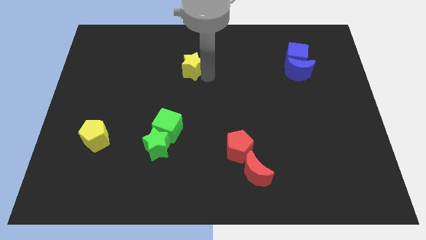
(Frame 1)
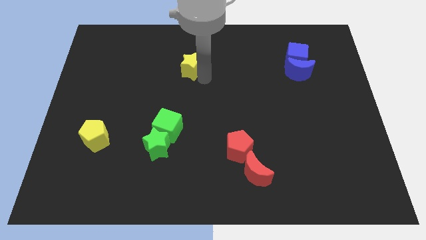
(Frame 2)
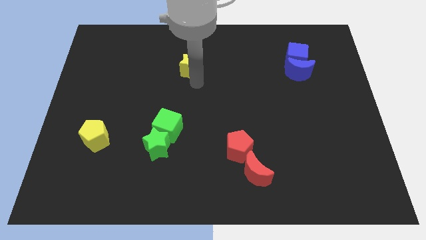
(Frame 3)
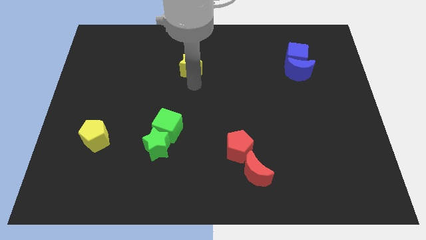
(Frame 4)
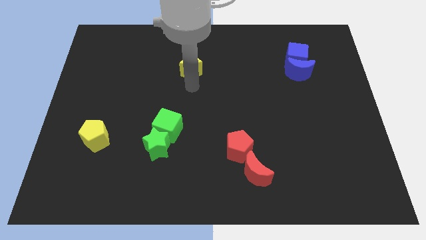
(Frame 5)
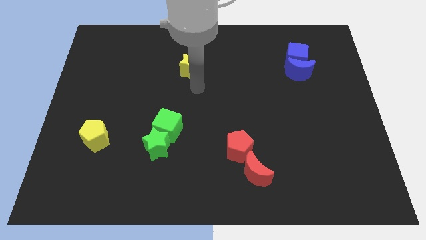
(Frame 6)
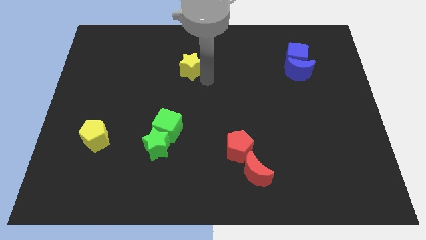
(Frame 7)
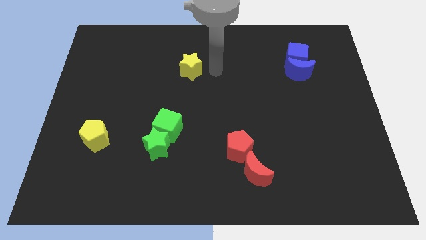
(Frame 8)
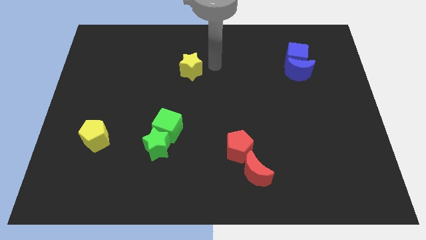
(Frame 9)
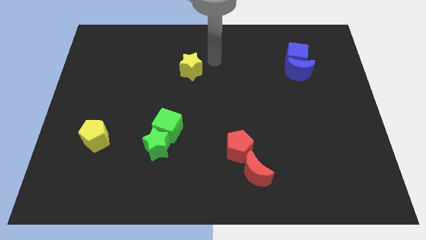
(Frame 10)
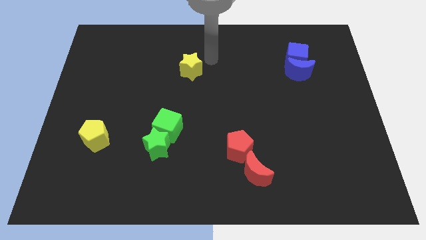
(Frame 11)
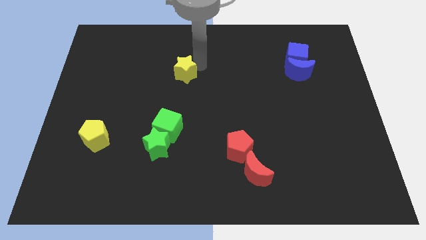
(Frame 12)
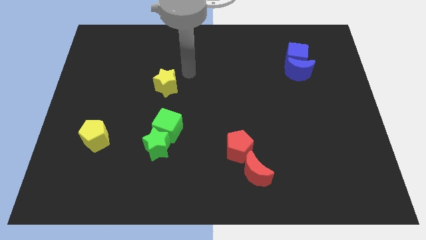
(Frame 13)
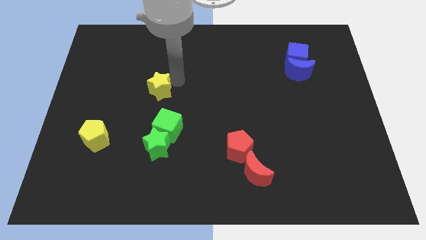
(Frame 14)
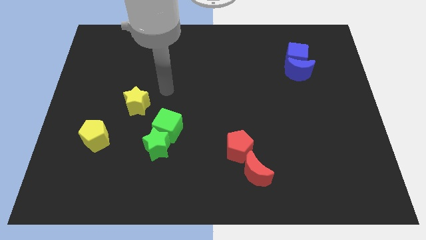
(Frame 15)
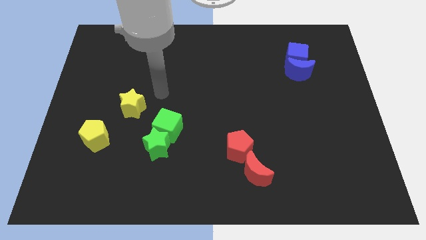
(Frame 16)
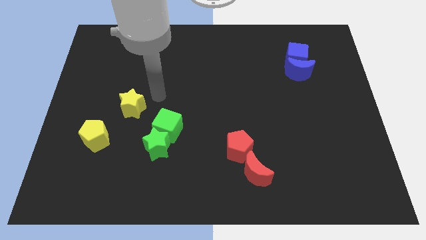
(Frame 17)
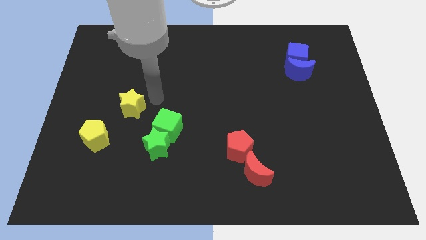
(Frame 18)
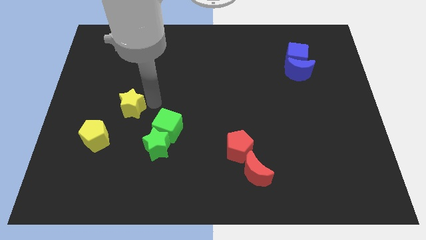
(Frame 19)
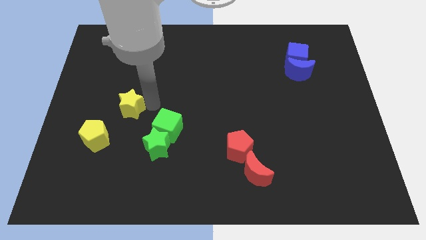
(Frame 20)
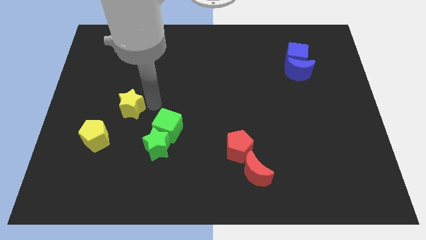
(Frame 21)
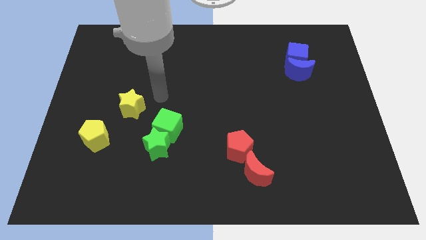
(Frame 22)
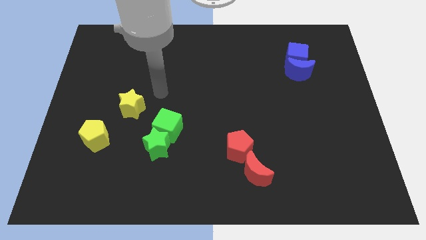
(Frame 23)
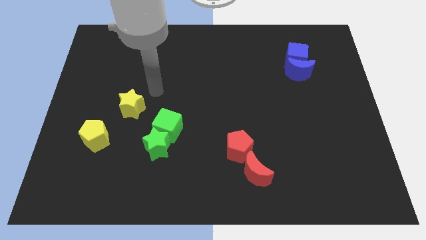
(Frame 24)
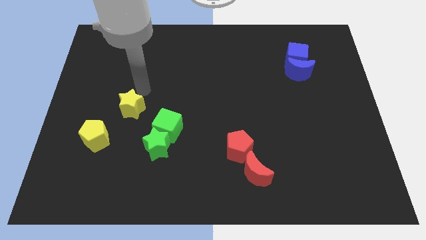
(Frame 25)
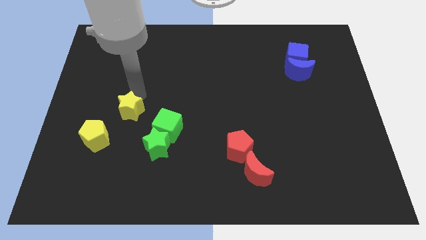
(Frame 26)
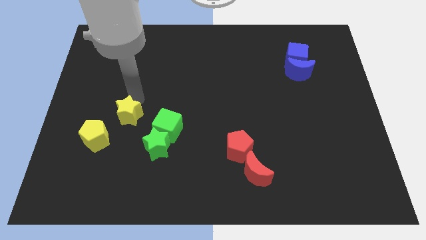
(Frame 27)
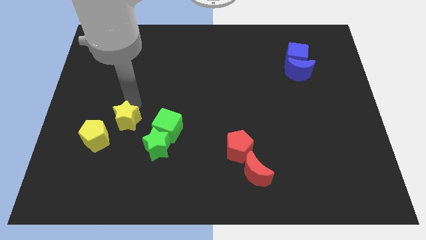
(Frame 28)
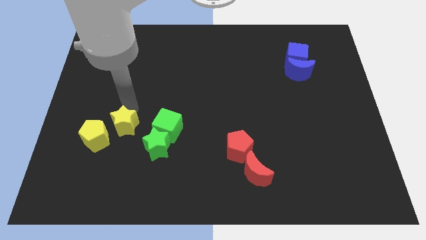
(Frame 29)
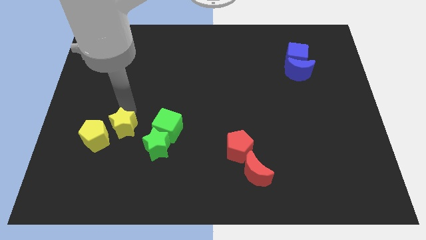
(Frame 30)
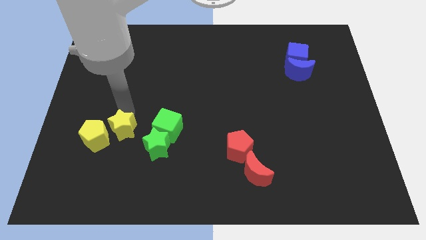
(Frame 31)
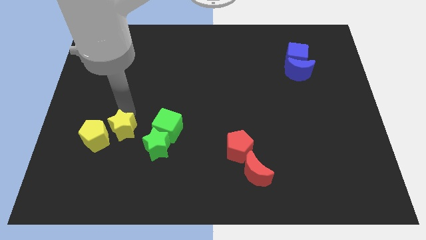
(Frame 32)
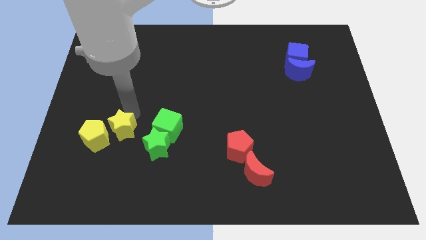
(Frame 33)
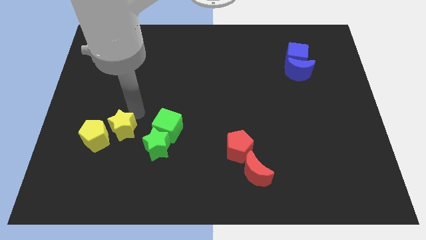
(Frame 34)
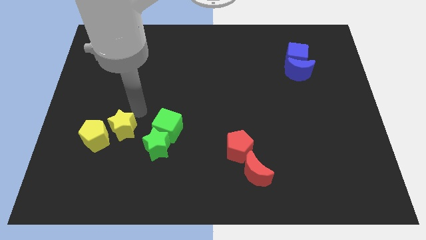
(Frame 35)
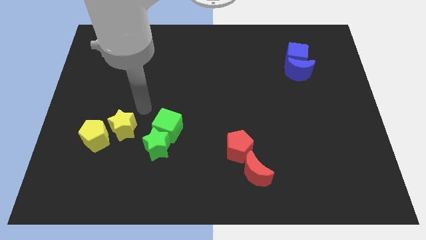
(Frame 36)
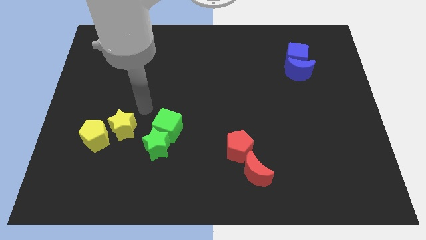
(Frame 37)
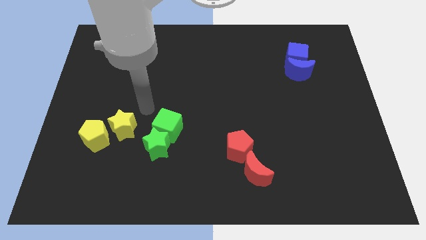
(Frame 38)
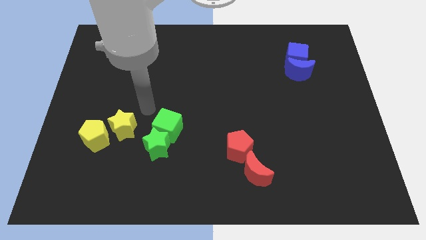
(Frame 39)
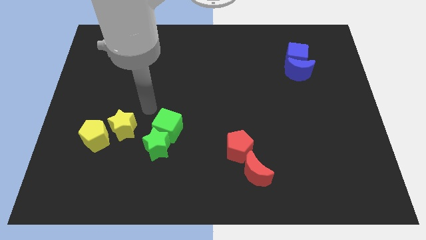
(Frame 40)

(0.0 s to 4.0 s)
push the yellow star to the right of the yellow pentagon

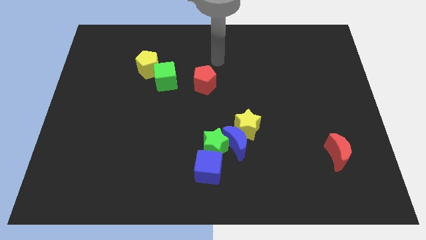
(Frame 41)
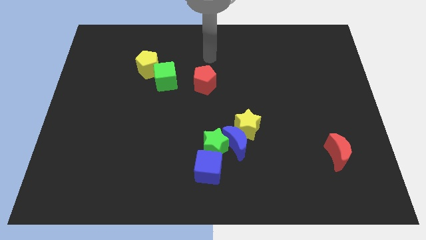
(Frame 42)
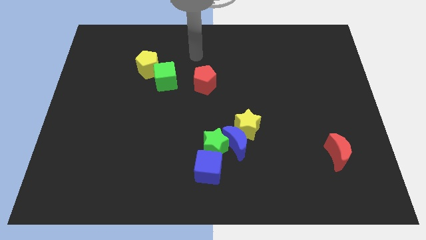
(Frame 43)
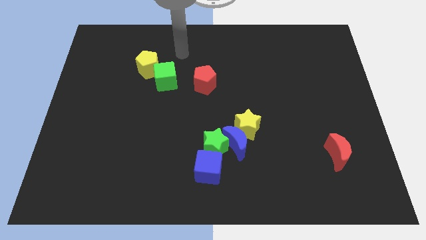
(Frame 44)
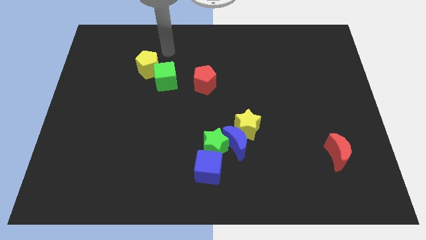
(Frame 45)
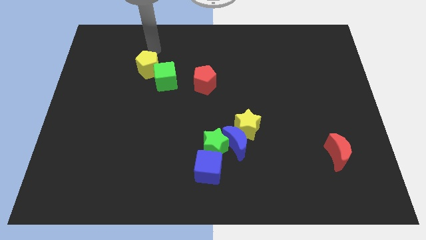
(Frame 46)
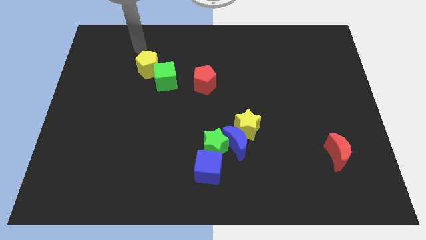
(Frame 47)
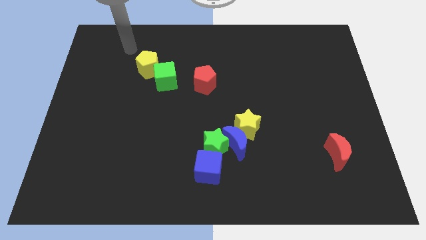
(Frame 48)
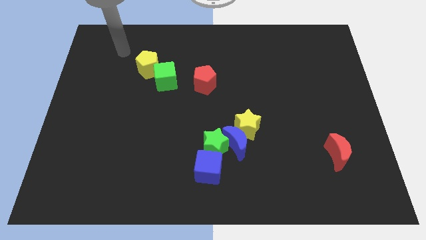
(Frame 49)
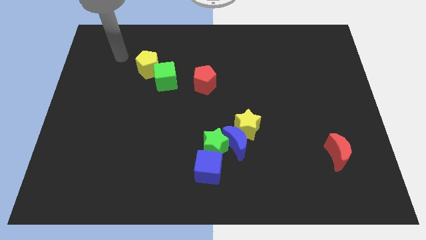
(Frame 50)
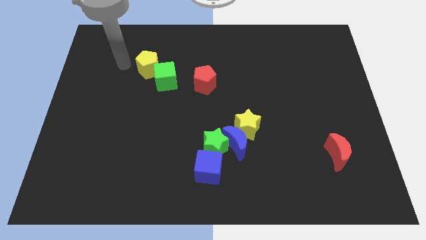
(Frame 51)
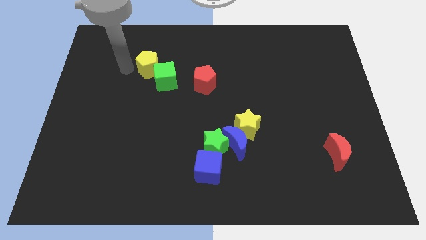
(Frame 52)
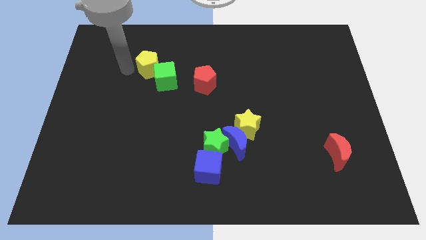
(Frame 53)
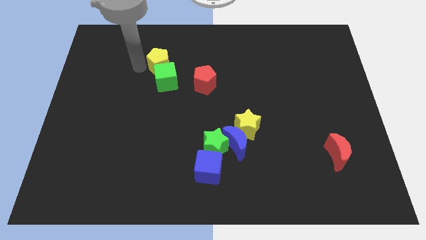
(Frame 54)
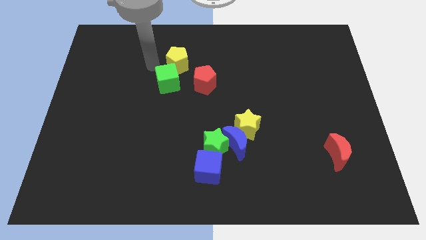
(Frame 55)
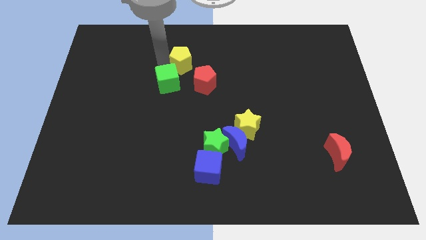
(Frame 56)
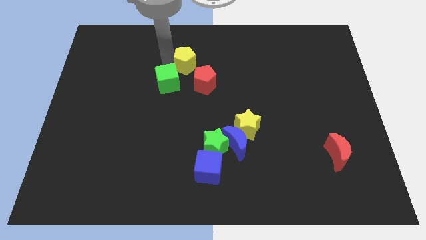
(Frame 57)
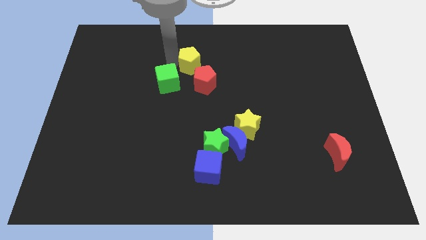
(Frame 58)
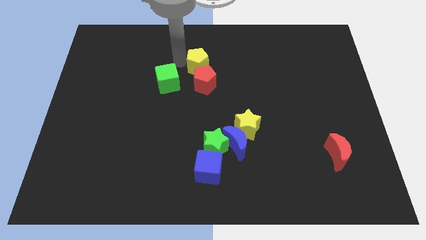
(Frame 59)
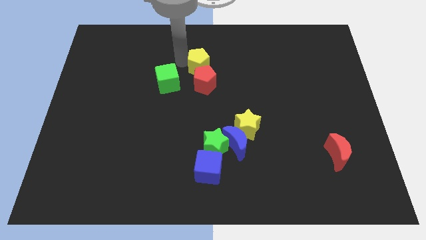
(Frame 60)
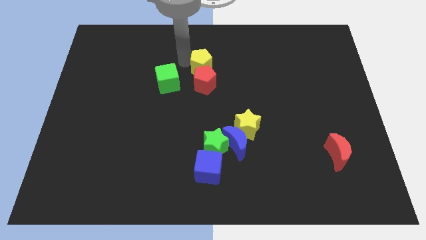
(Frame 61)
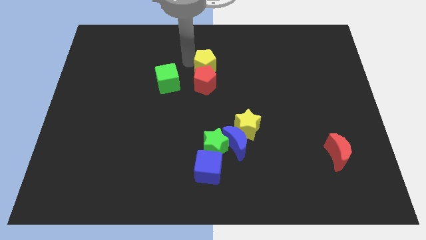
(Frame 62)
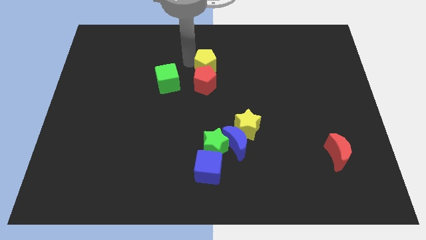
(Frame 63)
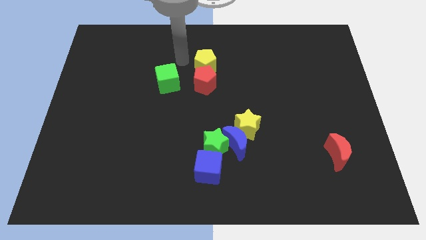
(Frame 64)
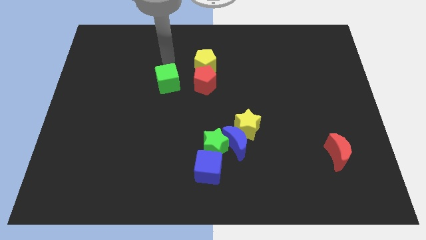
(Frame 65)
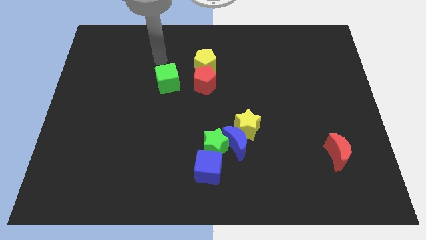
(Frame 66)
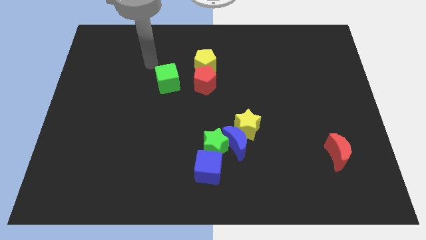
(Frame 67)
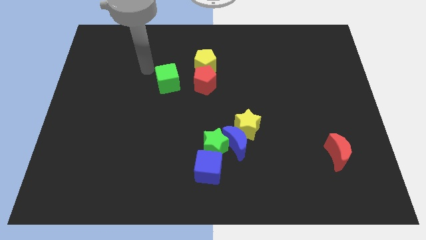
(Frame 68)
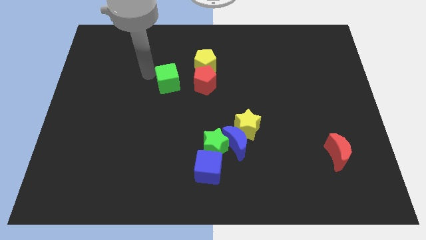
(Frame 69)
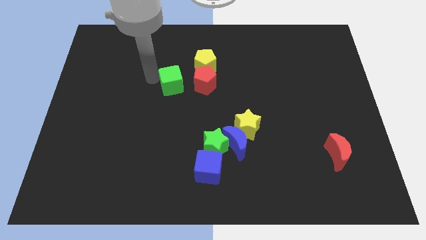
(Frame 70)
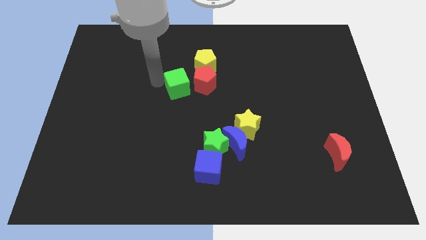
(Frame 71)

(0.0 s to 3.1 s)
separate yellow pentagon and the green cube

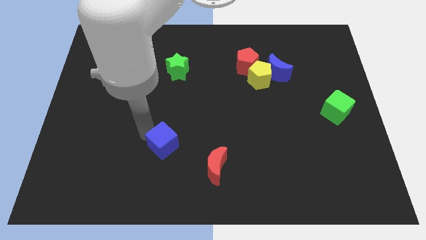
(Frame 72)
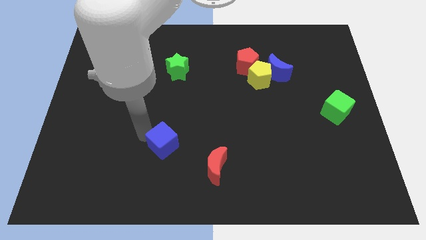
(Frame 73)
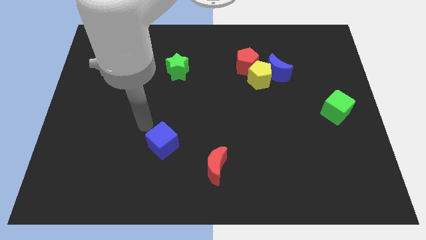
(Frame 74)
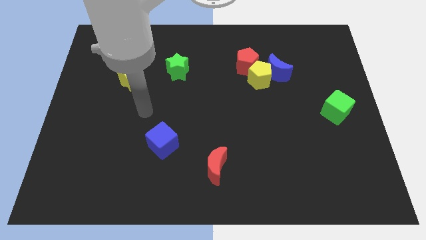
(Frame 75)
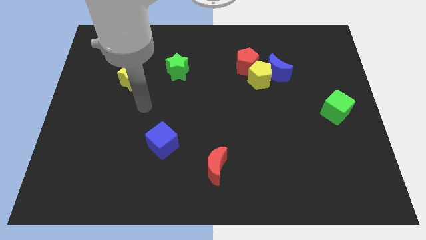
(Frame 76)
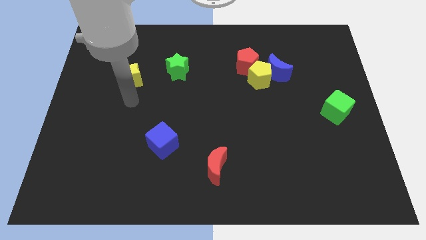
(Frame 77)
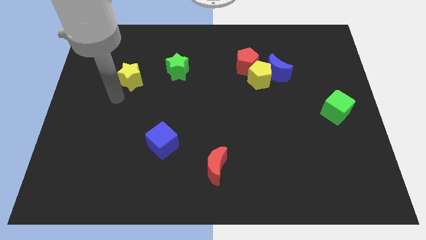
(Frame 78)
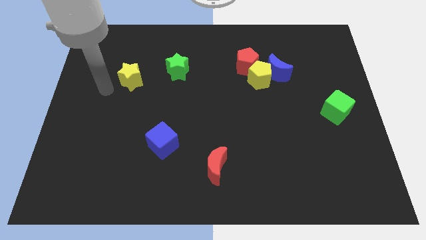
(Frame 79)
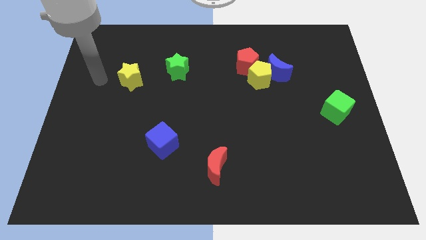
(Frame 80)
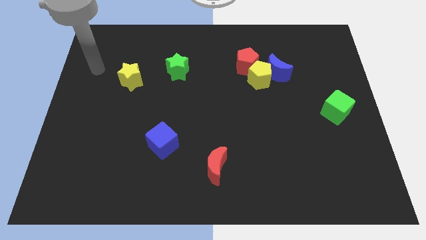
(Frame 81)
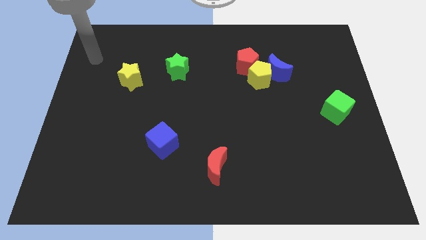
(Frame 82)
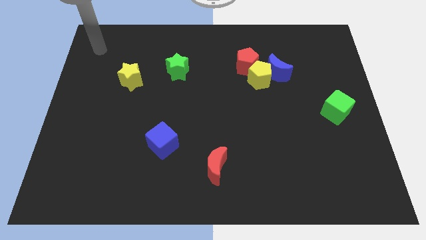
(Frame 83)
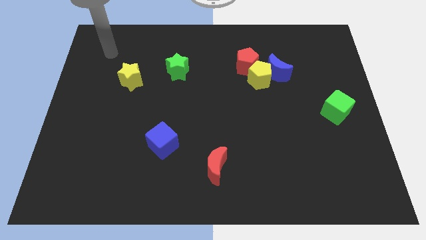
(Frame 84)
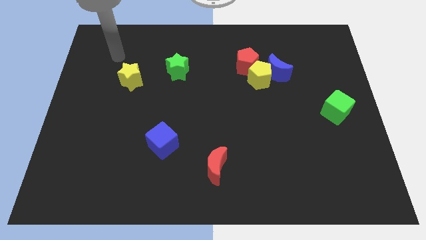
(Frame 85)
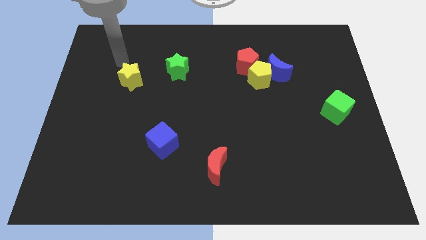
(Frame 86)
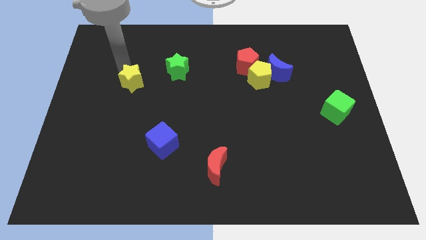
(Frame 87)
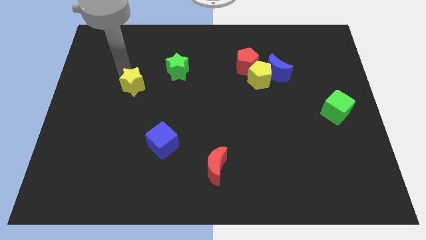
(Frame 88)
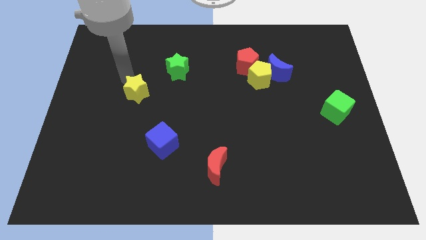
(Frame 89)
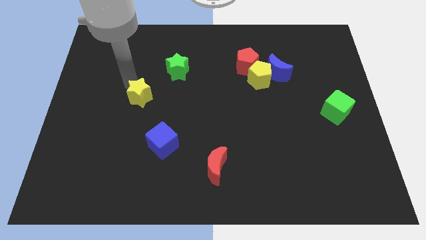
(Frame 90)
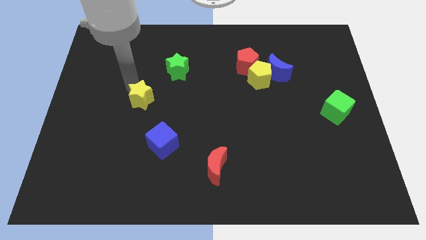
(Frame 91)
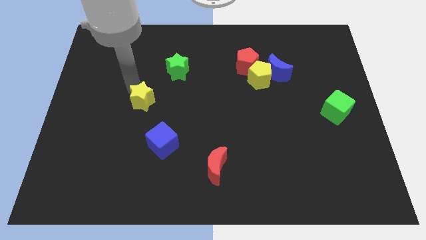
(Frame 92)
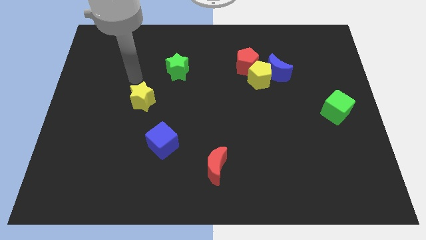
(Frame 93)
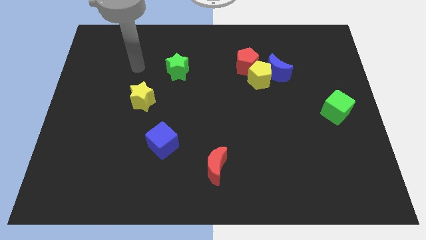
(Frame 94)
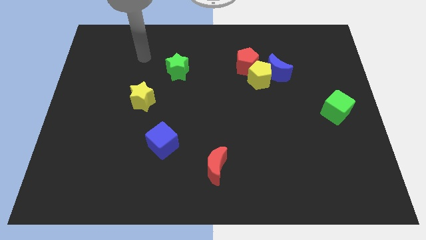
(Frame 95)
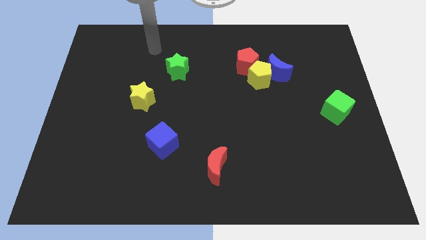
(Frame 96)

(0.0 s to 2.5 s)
move the yellow star to the bottom left of the green star
